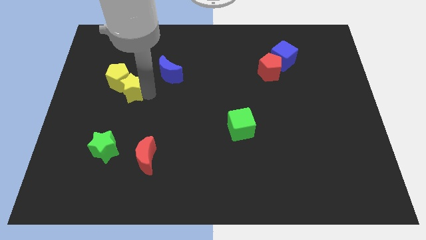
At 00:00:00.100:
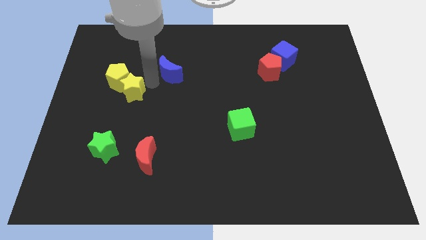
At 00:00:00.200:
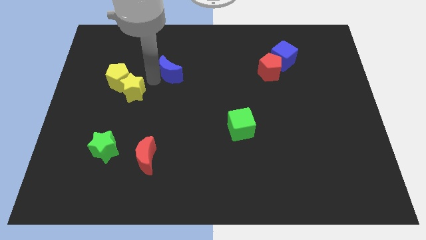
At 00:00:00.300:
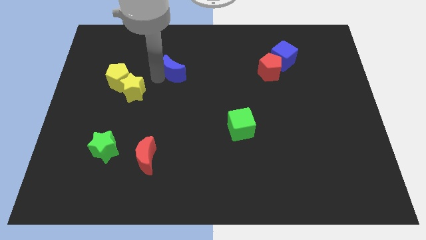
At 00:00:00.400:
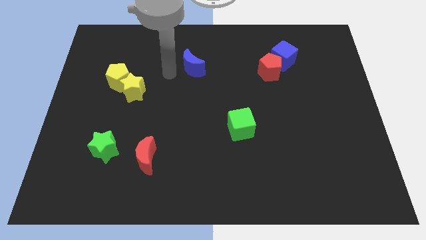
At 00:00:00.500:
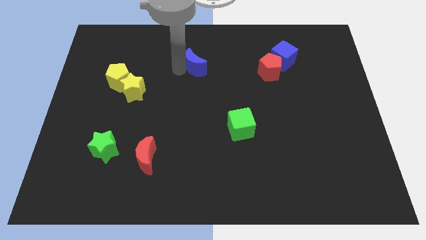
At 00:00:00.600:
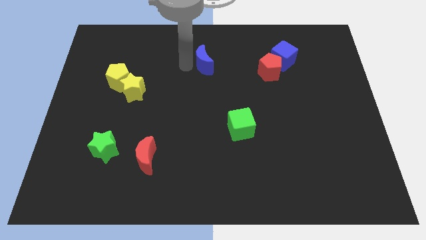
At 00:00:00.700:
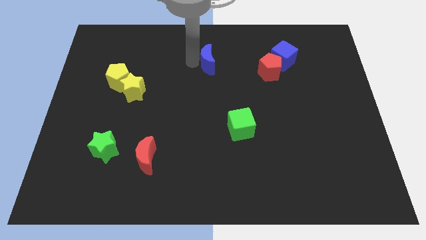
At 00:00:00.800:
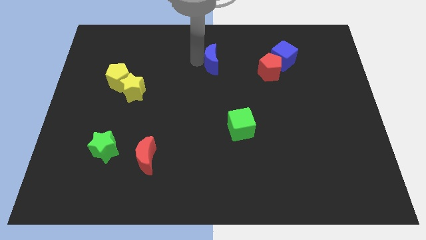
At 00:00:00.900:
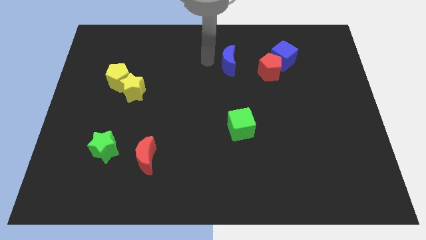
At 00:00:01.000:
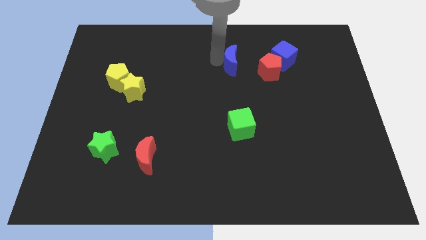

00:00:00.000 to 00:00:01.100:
push the blue crescent to the top of the green cube

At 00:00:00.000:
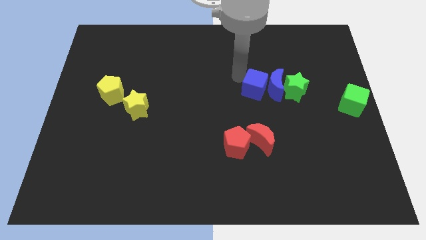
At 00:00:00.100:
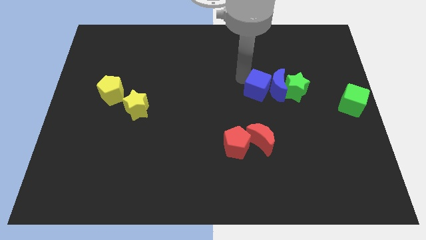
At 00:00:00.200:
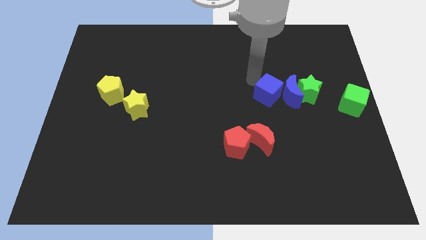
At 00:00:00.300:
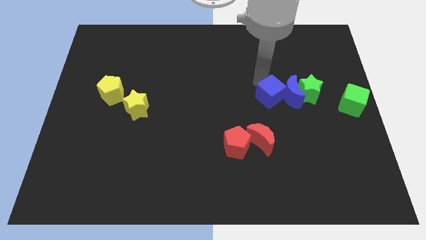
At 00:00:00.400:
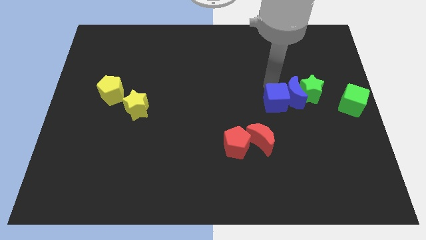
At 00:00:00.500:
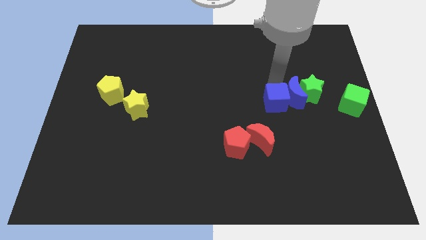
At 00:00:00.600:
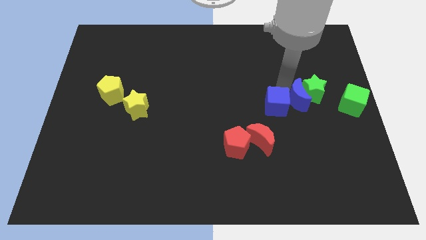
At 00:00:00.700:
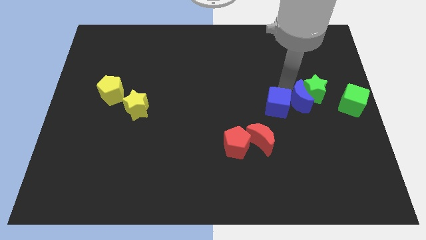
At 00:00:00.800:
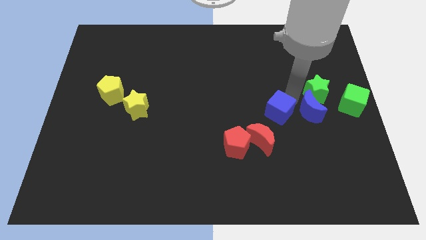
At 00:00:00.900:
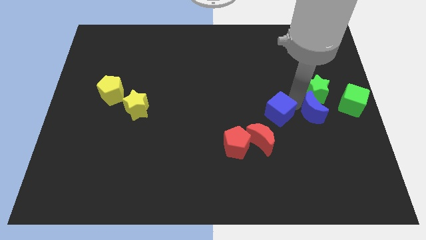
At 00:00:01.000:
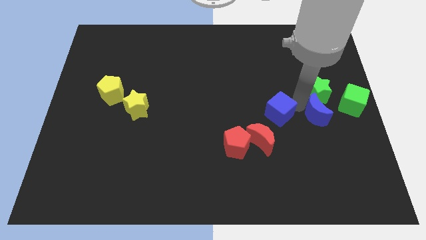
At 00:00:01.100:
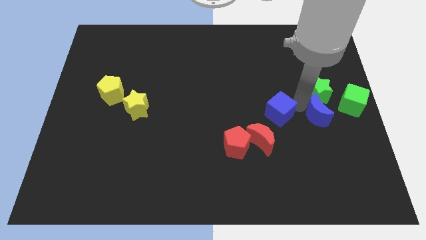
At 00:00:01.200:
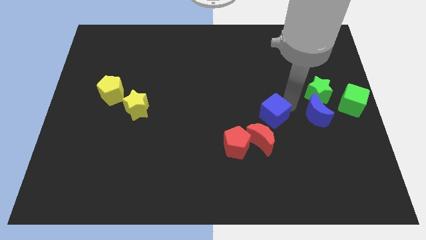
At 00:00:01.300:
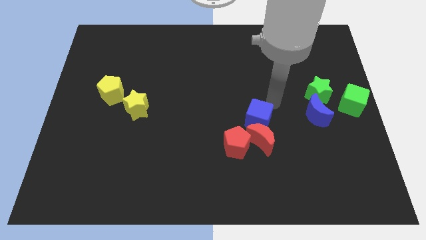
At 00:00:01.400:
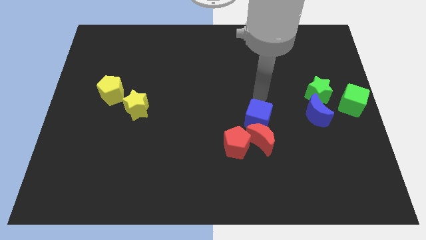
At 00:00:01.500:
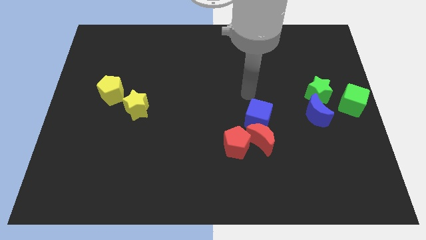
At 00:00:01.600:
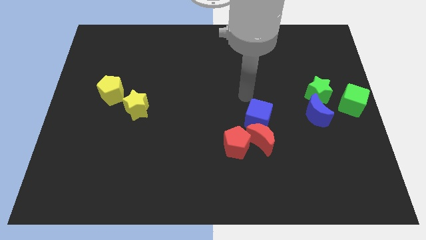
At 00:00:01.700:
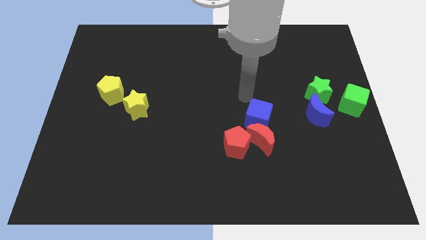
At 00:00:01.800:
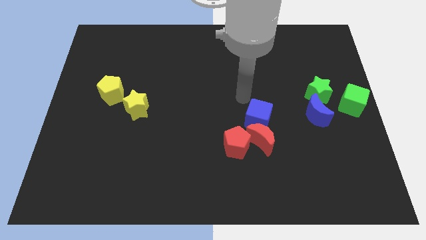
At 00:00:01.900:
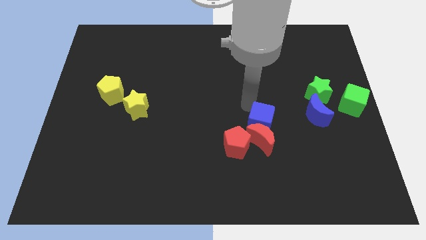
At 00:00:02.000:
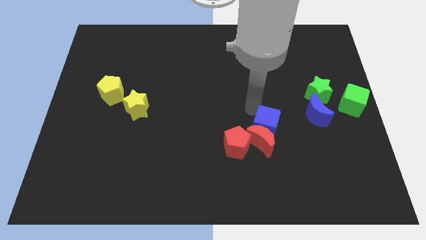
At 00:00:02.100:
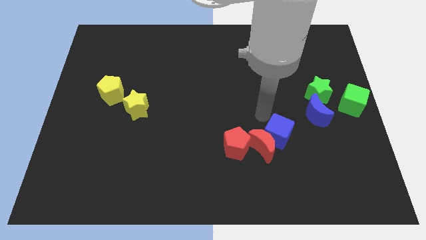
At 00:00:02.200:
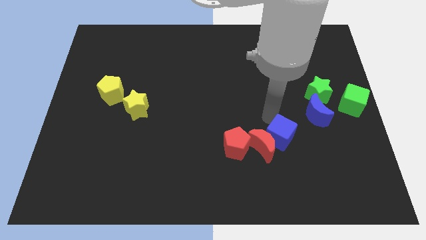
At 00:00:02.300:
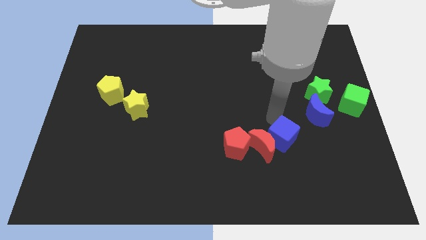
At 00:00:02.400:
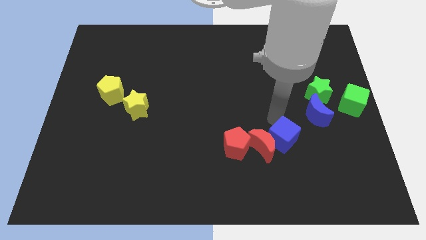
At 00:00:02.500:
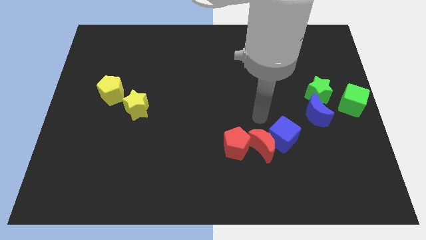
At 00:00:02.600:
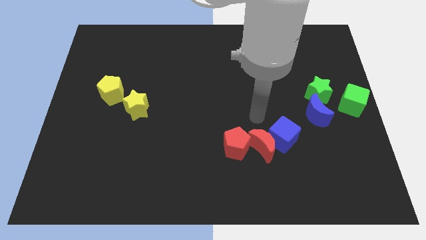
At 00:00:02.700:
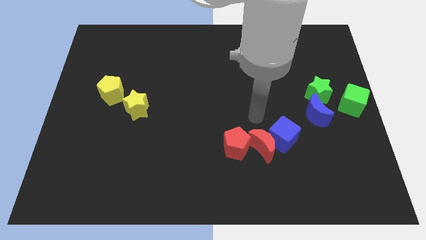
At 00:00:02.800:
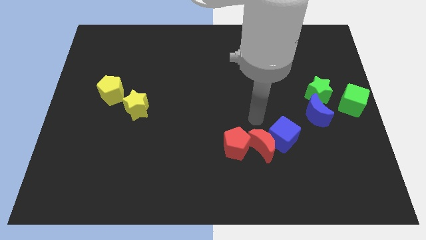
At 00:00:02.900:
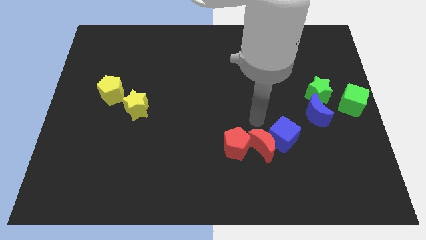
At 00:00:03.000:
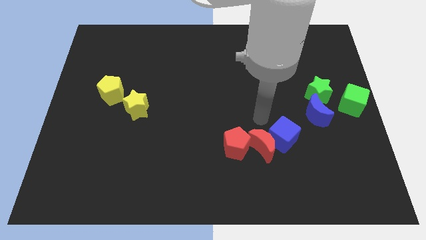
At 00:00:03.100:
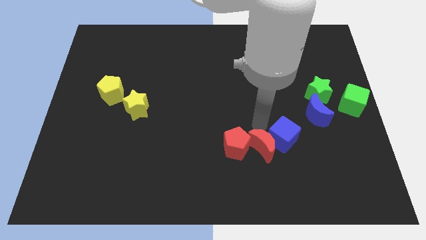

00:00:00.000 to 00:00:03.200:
push the blue cube into the red crescent

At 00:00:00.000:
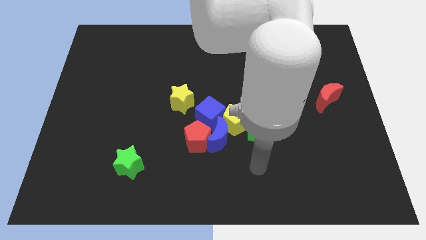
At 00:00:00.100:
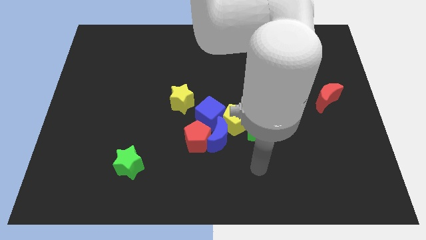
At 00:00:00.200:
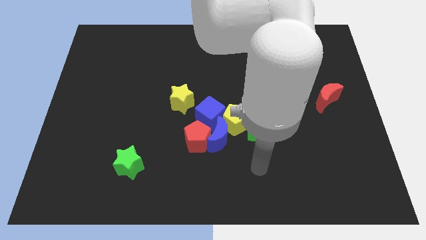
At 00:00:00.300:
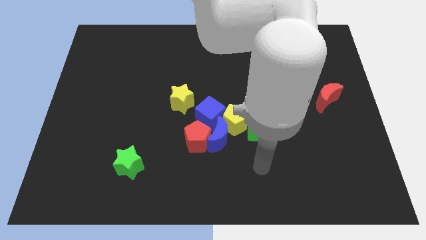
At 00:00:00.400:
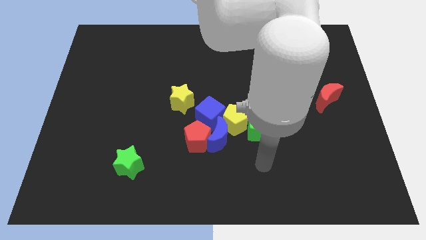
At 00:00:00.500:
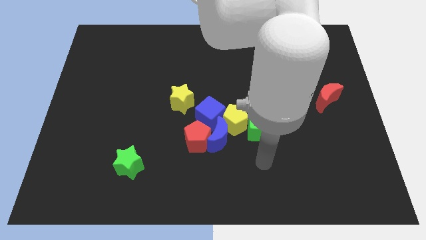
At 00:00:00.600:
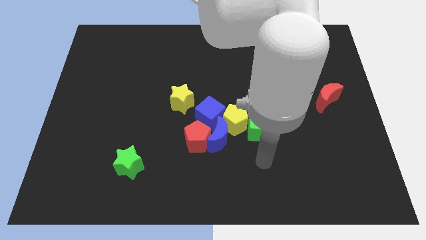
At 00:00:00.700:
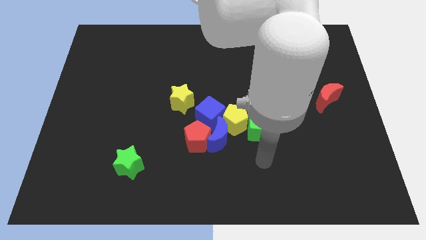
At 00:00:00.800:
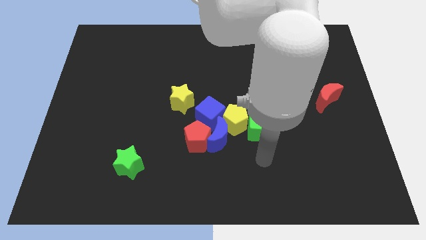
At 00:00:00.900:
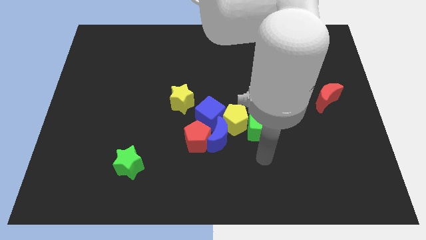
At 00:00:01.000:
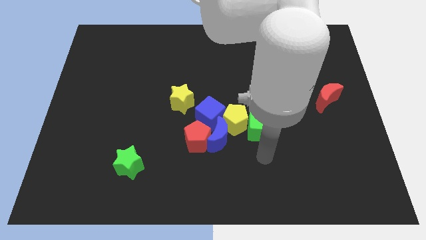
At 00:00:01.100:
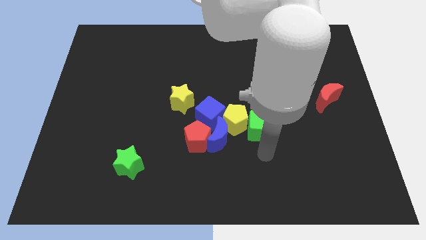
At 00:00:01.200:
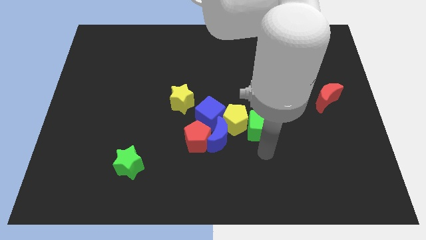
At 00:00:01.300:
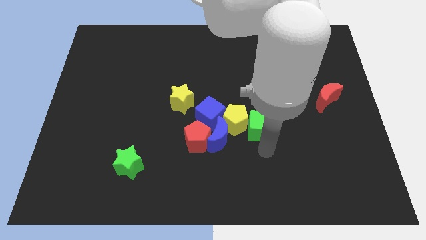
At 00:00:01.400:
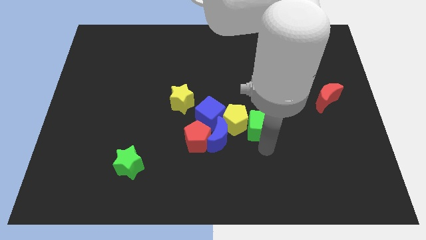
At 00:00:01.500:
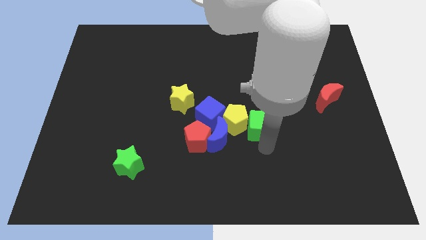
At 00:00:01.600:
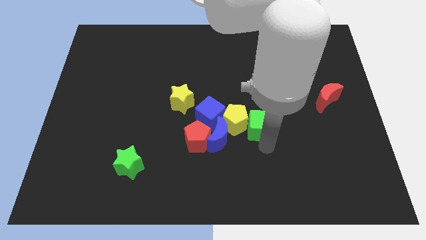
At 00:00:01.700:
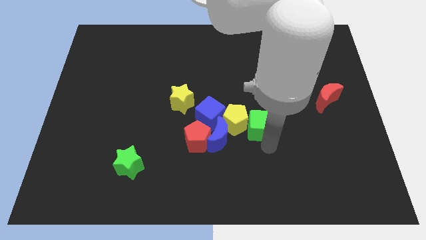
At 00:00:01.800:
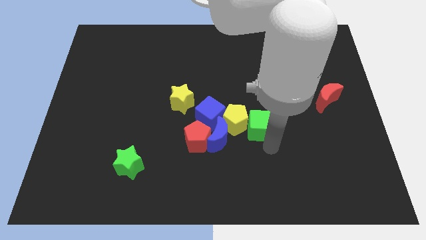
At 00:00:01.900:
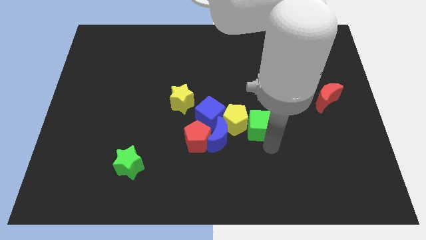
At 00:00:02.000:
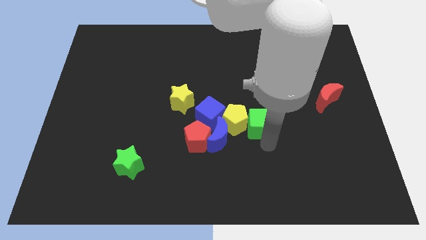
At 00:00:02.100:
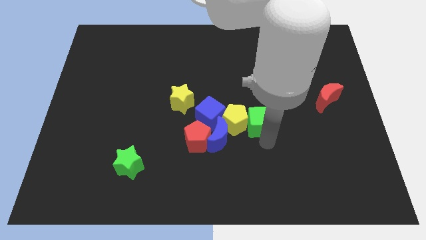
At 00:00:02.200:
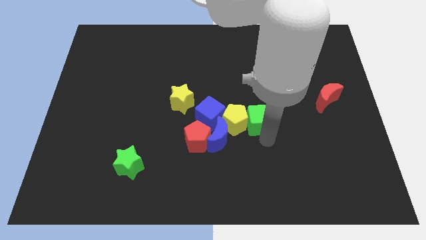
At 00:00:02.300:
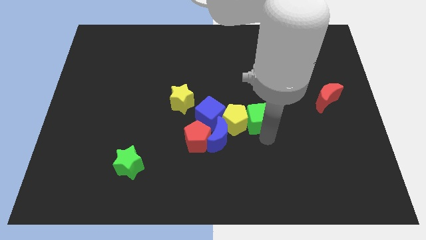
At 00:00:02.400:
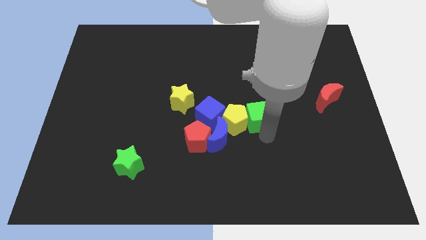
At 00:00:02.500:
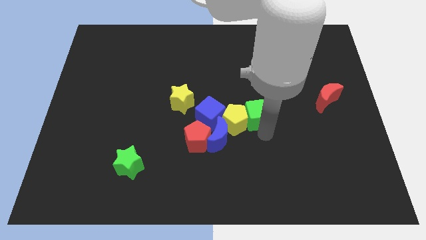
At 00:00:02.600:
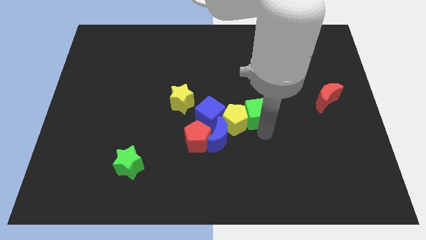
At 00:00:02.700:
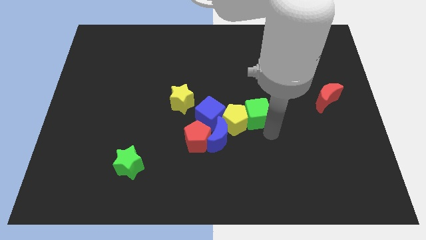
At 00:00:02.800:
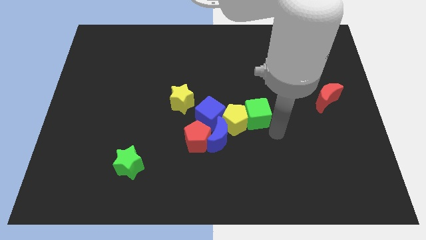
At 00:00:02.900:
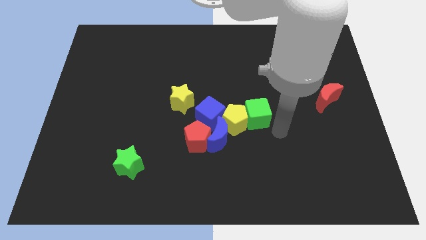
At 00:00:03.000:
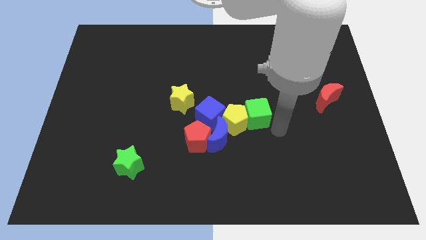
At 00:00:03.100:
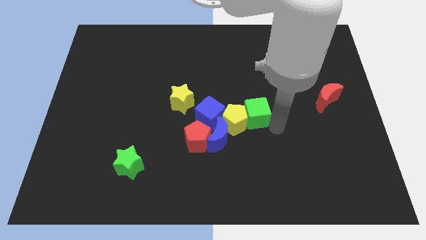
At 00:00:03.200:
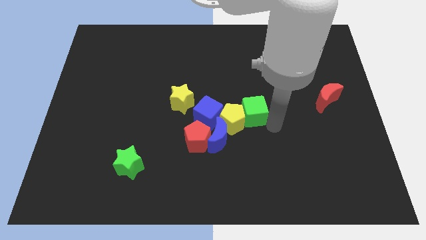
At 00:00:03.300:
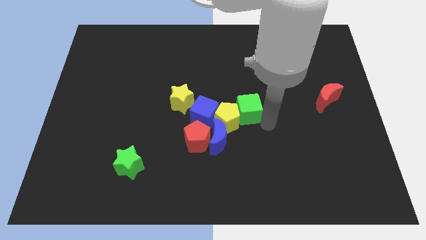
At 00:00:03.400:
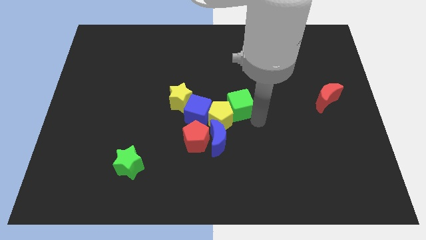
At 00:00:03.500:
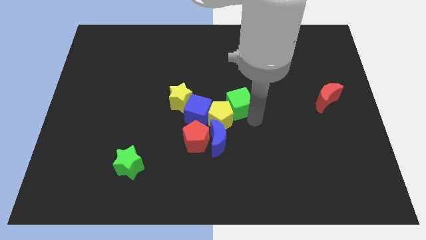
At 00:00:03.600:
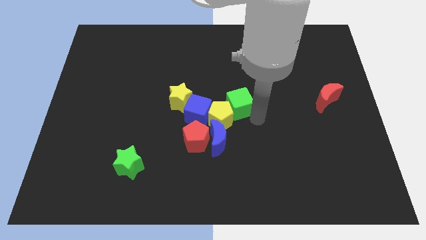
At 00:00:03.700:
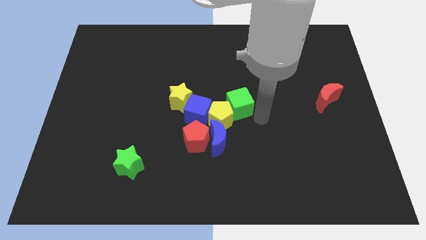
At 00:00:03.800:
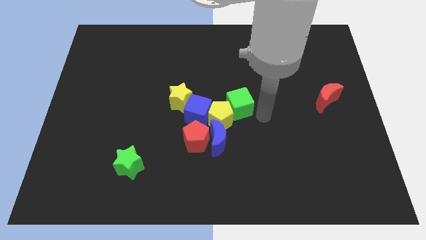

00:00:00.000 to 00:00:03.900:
push green cube into yellow pentagon

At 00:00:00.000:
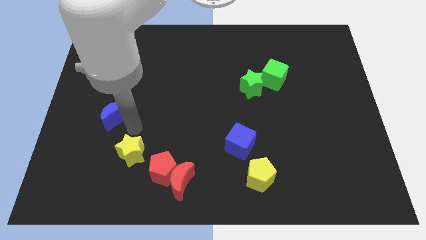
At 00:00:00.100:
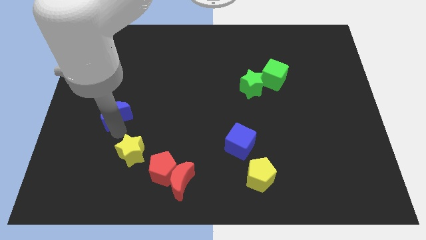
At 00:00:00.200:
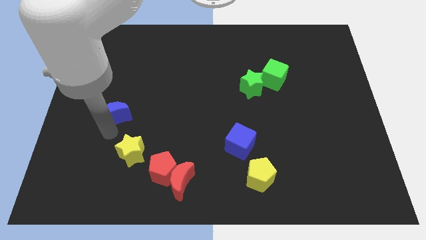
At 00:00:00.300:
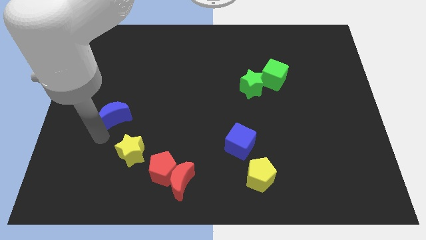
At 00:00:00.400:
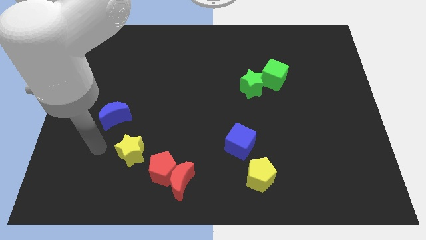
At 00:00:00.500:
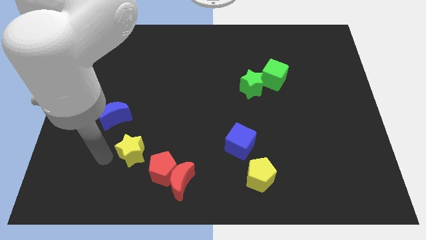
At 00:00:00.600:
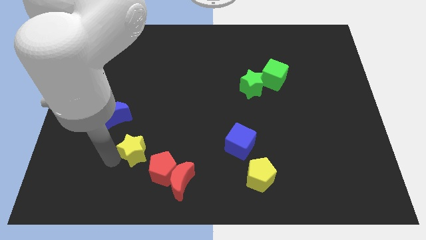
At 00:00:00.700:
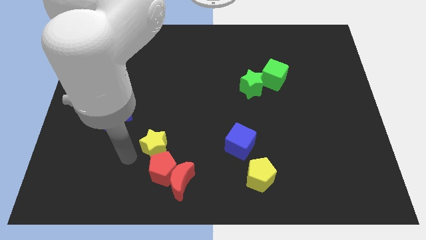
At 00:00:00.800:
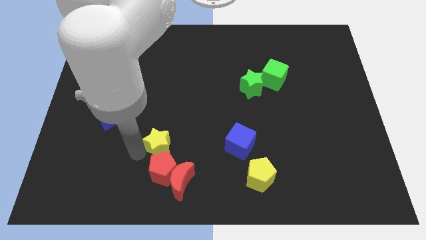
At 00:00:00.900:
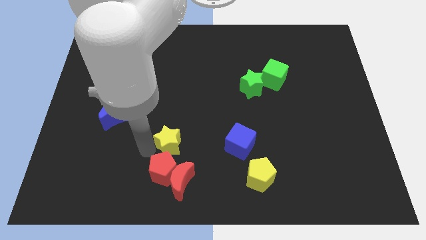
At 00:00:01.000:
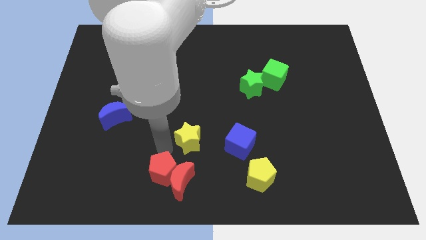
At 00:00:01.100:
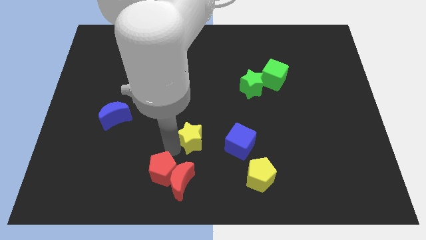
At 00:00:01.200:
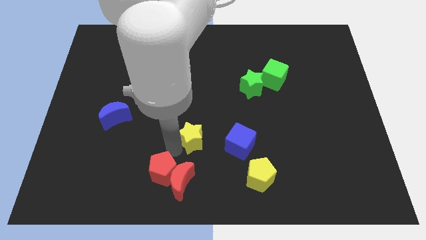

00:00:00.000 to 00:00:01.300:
push the yellow star to the right
